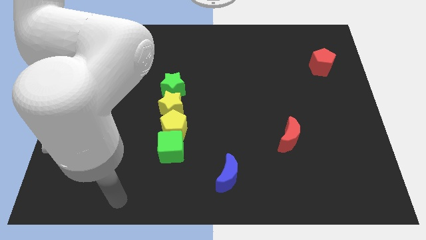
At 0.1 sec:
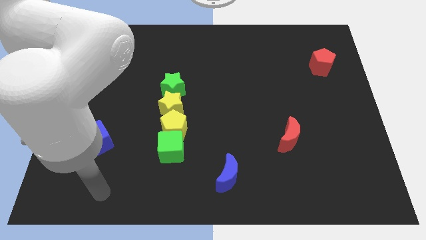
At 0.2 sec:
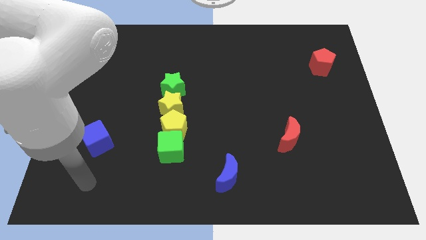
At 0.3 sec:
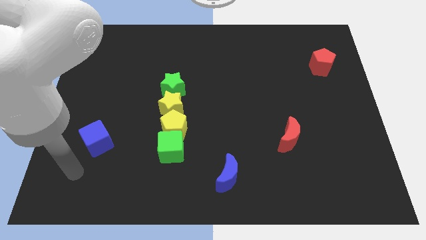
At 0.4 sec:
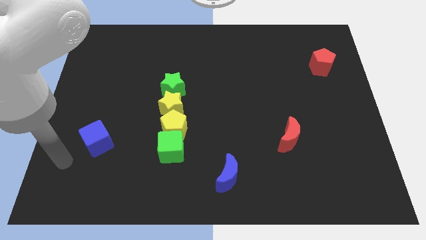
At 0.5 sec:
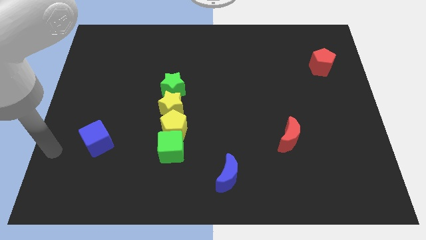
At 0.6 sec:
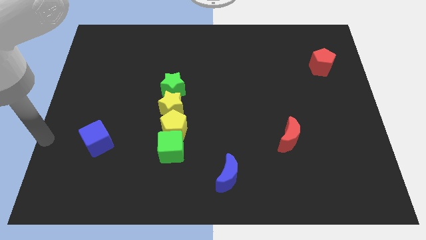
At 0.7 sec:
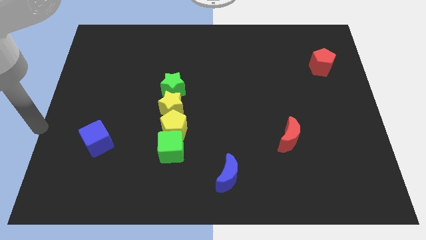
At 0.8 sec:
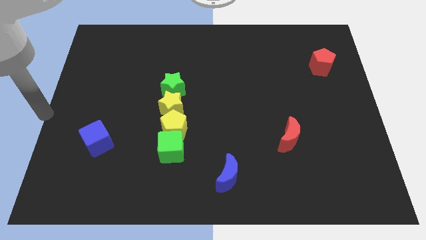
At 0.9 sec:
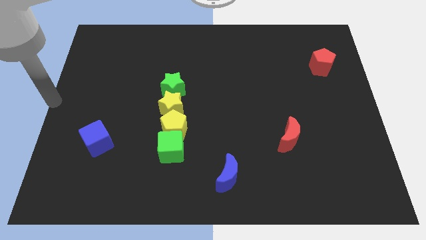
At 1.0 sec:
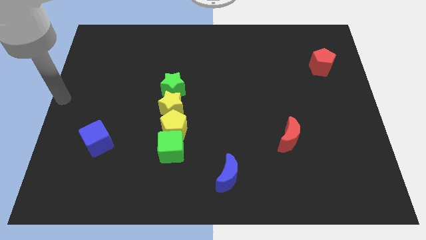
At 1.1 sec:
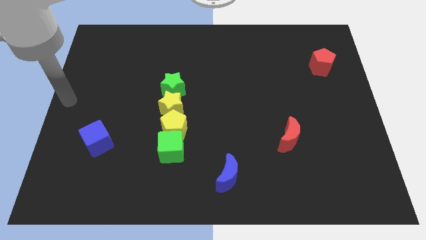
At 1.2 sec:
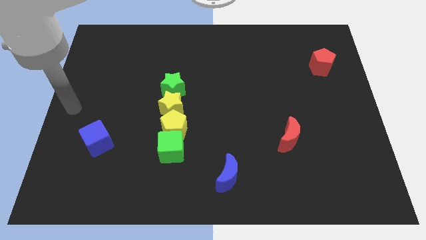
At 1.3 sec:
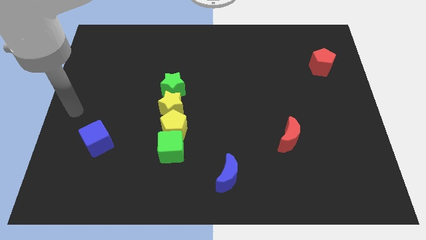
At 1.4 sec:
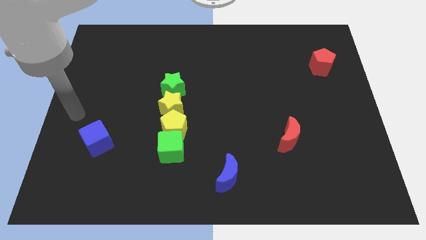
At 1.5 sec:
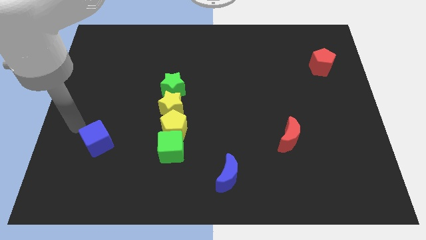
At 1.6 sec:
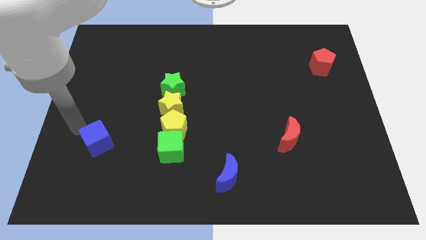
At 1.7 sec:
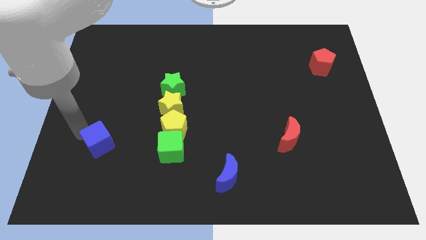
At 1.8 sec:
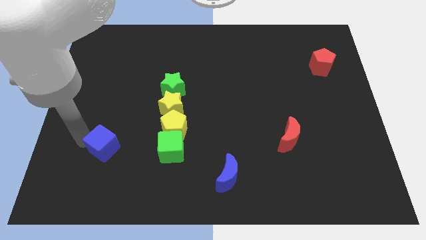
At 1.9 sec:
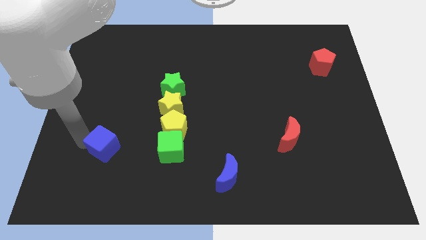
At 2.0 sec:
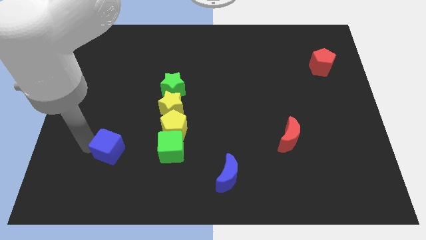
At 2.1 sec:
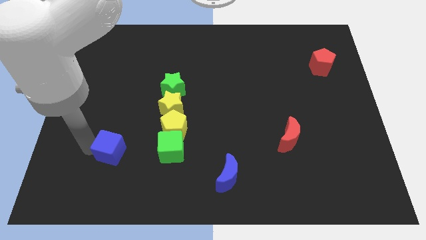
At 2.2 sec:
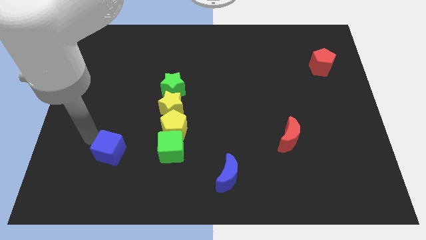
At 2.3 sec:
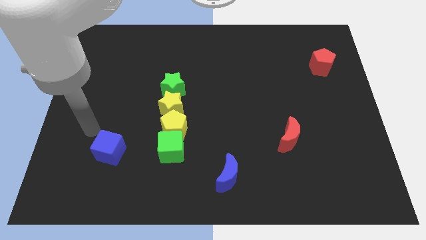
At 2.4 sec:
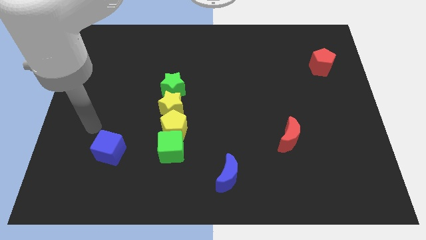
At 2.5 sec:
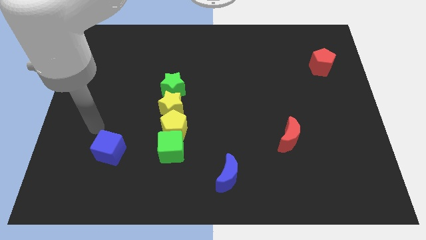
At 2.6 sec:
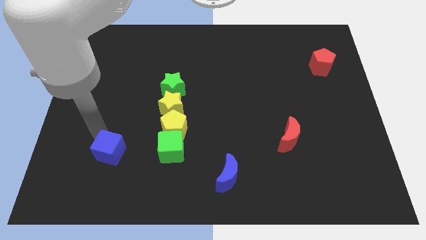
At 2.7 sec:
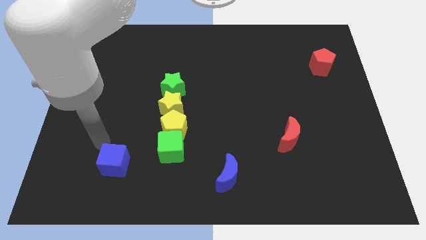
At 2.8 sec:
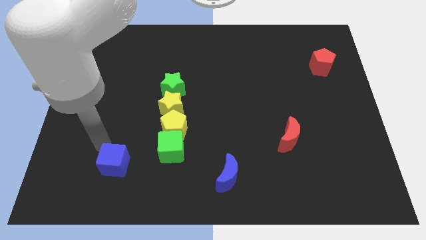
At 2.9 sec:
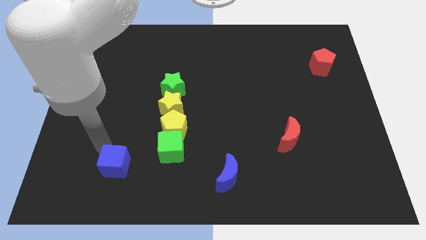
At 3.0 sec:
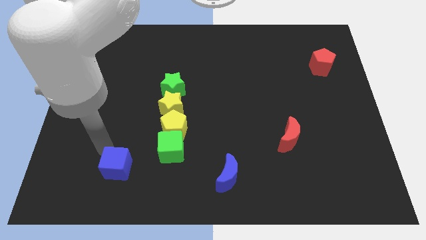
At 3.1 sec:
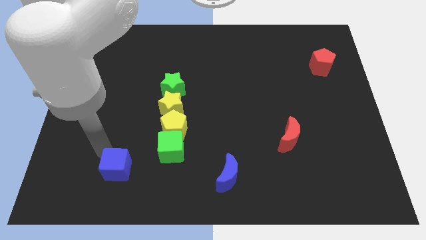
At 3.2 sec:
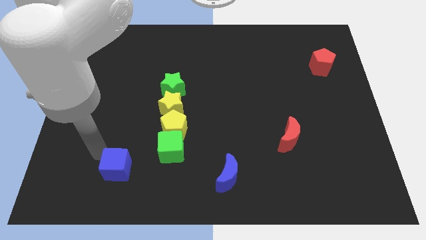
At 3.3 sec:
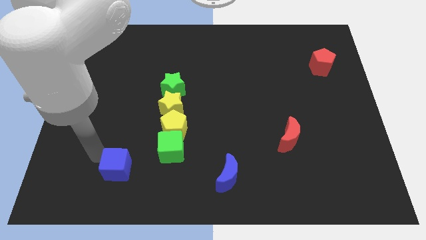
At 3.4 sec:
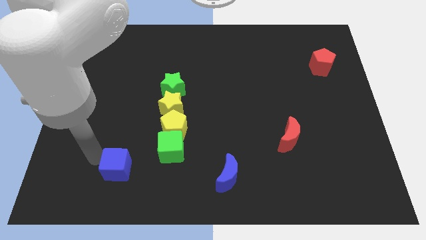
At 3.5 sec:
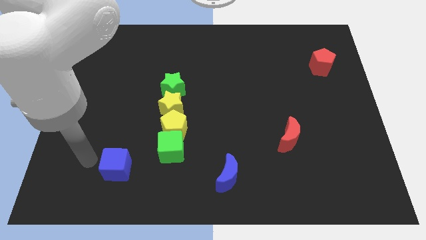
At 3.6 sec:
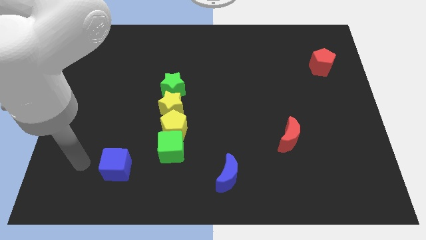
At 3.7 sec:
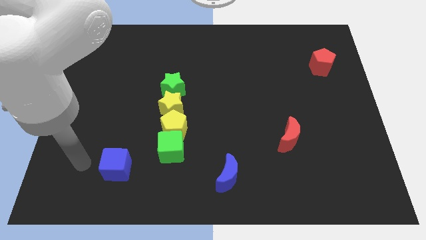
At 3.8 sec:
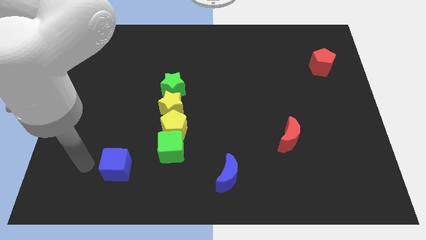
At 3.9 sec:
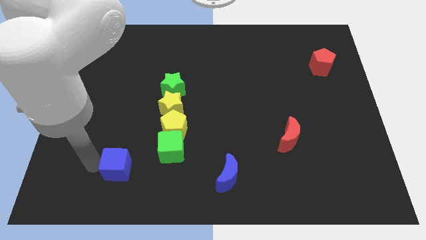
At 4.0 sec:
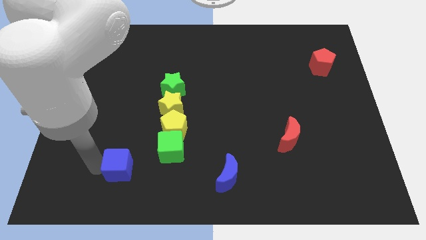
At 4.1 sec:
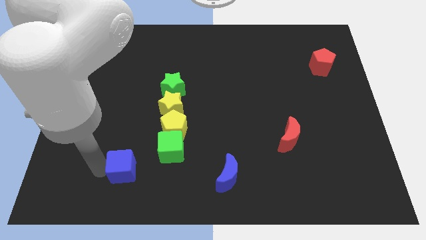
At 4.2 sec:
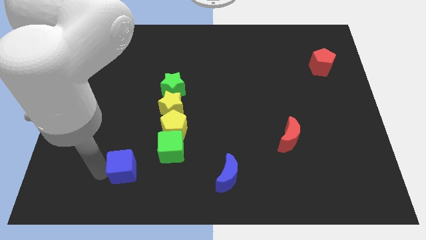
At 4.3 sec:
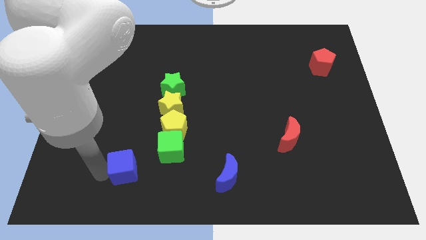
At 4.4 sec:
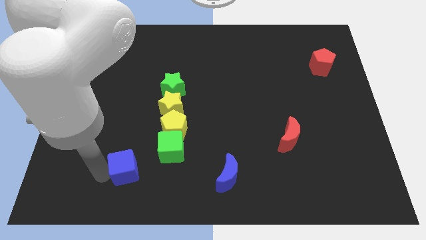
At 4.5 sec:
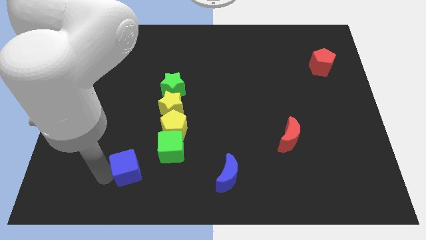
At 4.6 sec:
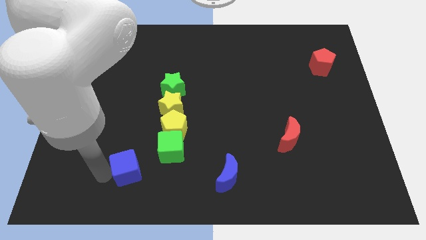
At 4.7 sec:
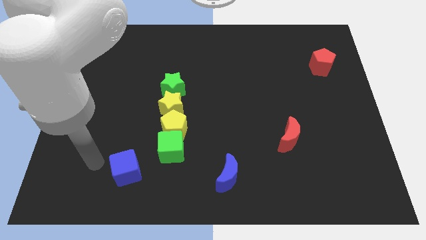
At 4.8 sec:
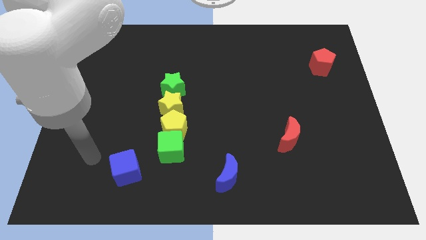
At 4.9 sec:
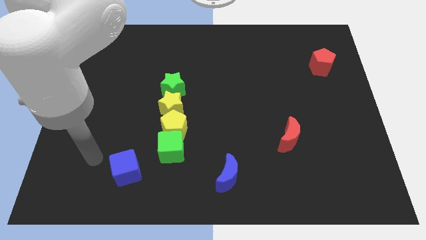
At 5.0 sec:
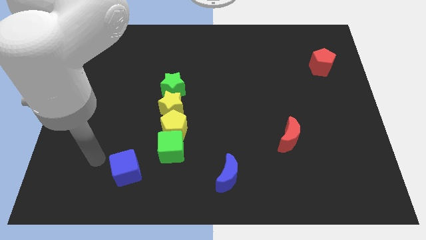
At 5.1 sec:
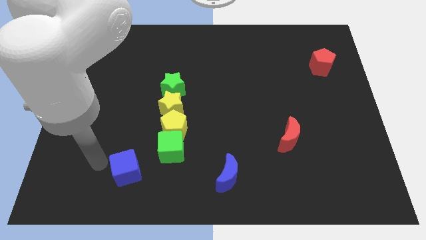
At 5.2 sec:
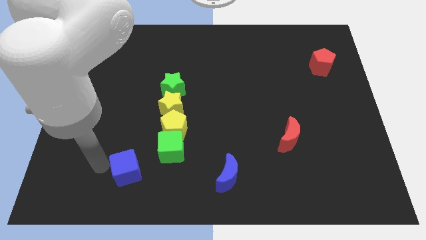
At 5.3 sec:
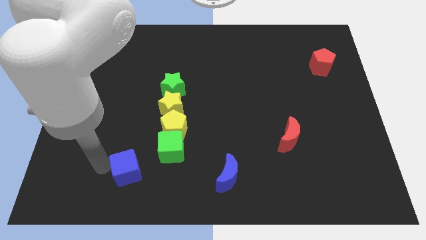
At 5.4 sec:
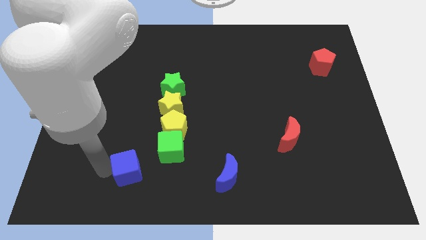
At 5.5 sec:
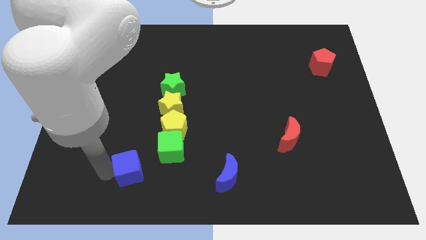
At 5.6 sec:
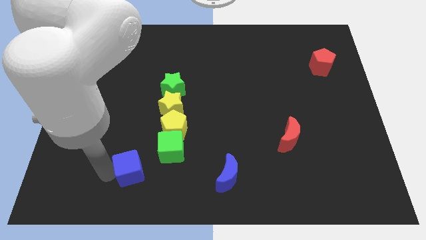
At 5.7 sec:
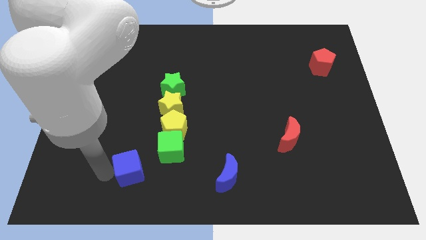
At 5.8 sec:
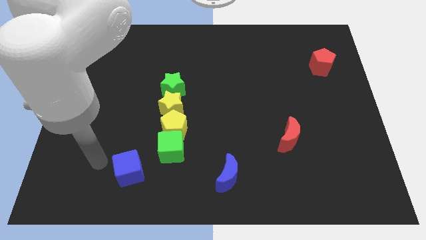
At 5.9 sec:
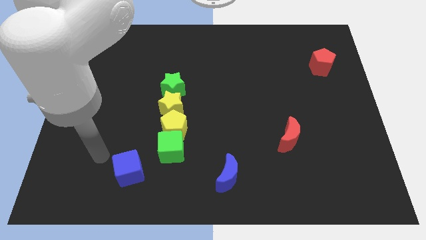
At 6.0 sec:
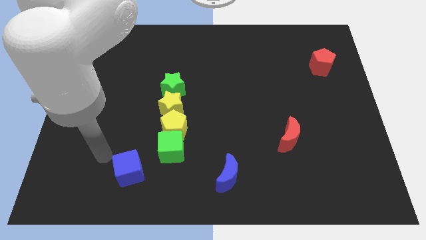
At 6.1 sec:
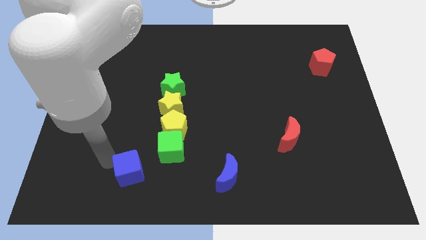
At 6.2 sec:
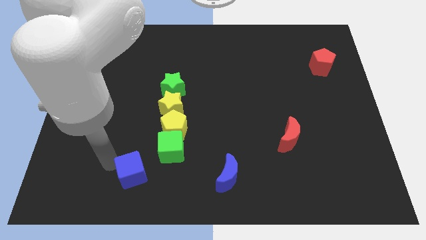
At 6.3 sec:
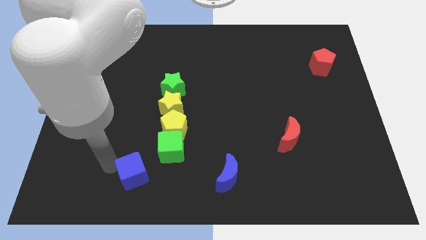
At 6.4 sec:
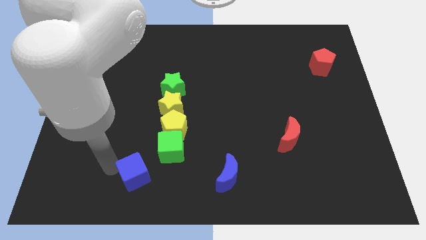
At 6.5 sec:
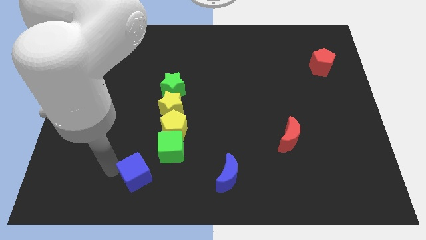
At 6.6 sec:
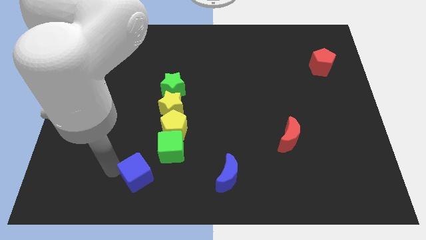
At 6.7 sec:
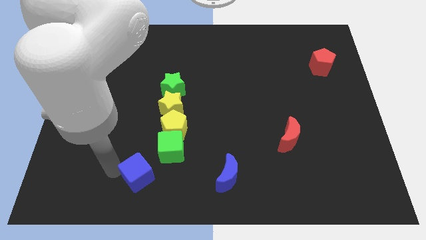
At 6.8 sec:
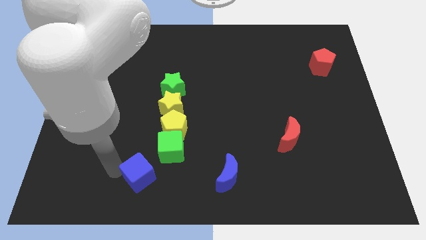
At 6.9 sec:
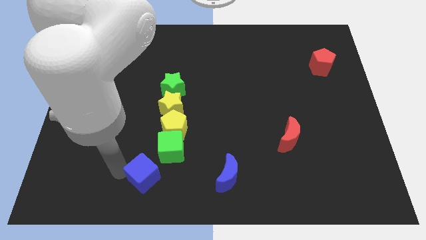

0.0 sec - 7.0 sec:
push the blue cube towards the bottom side of the green cube

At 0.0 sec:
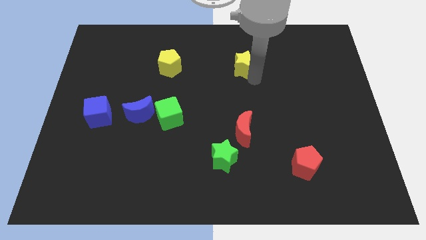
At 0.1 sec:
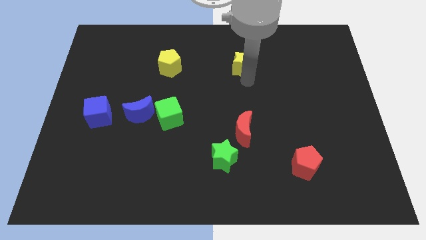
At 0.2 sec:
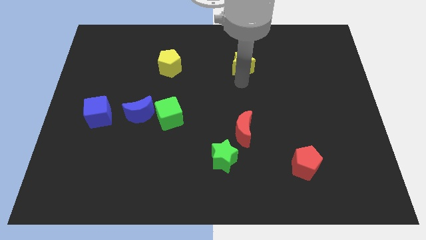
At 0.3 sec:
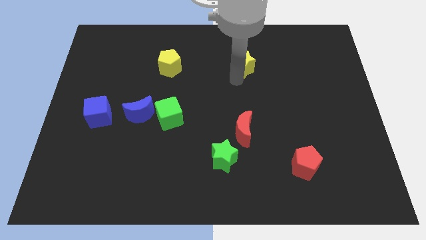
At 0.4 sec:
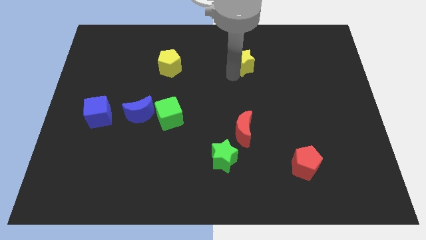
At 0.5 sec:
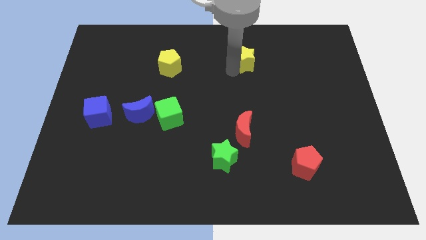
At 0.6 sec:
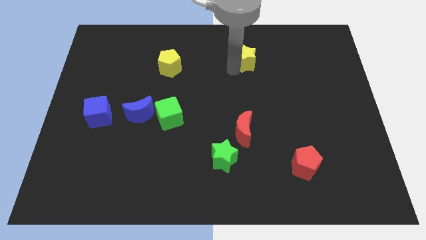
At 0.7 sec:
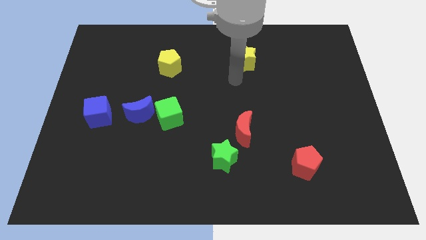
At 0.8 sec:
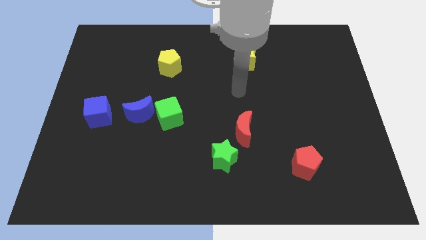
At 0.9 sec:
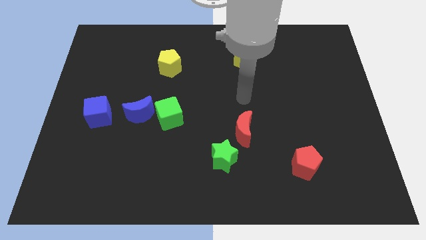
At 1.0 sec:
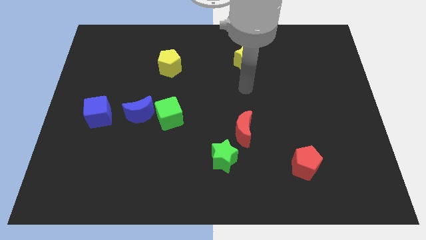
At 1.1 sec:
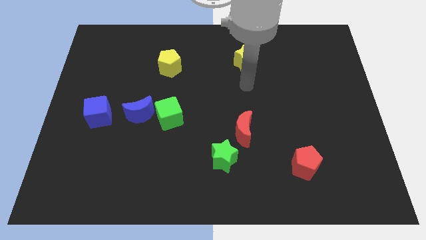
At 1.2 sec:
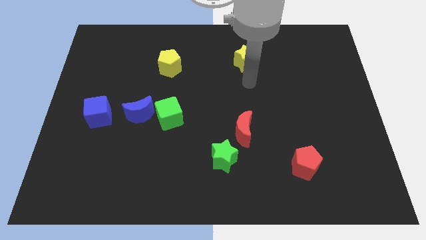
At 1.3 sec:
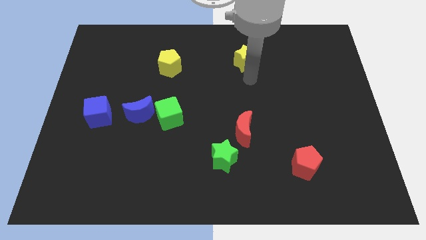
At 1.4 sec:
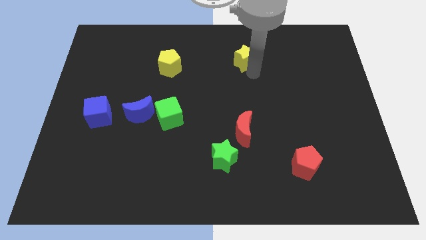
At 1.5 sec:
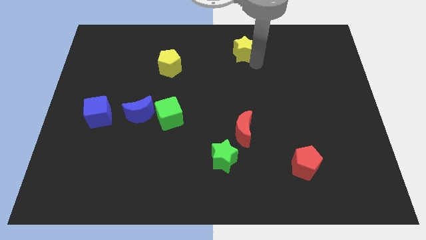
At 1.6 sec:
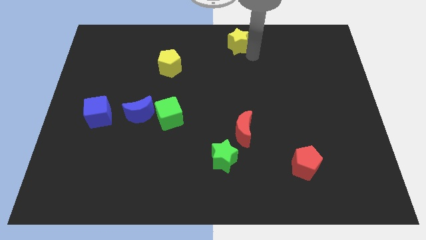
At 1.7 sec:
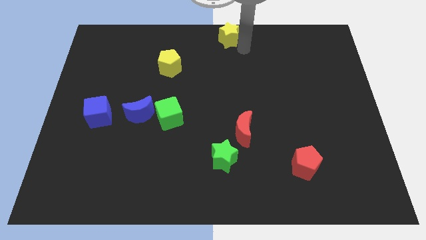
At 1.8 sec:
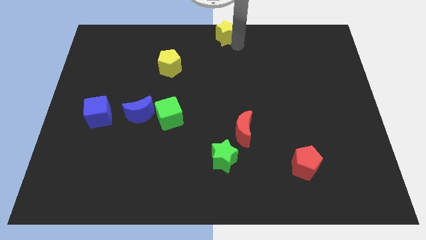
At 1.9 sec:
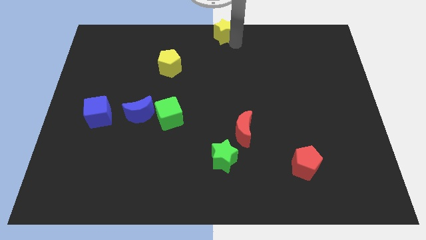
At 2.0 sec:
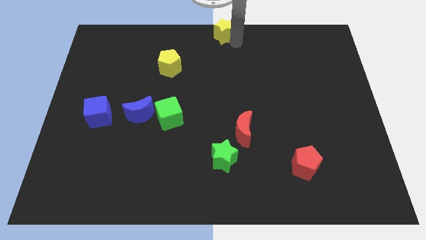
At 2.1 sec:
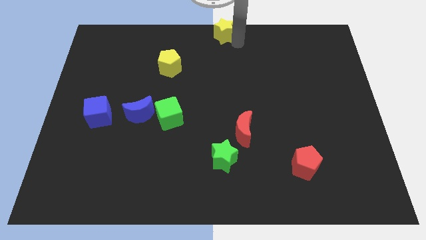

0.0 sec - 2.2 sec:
move yellow star to the top center
